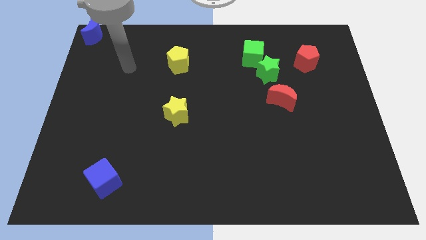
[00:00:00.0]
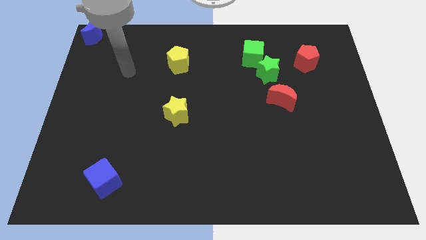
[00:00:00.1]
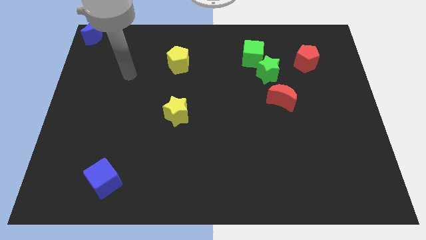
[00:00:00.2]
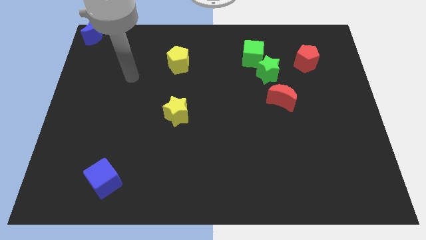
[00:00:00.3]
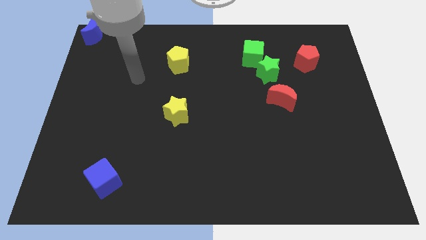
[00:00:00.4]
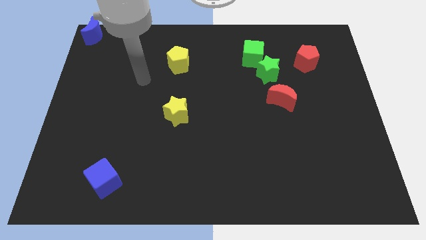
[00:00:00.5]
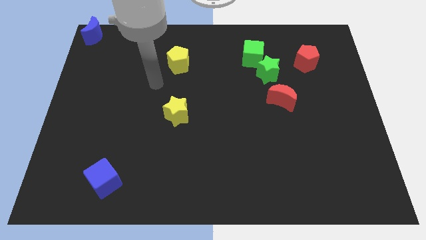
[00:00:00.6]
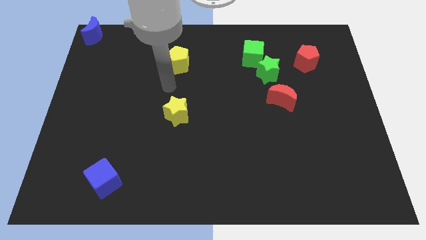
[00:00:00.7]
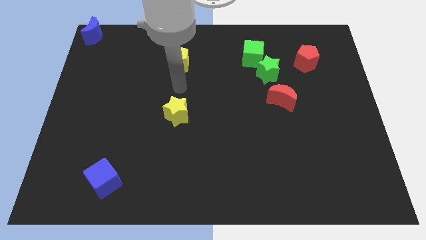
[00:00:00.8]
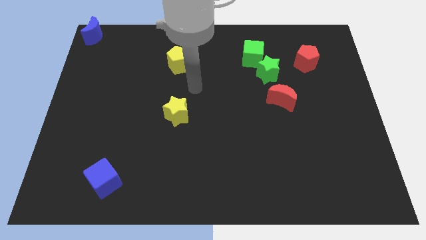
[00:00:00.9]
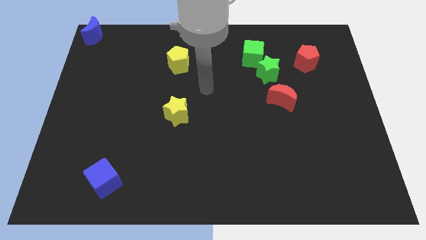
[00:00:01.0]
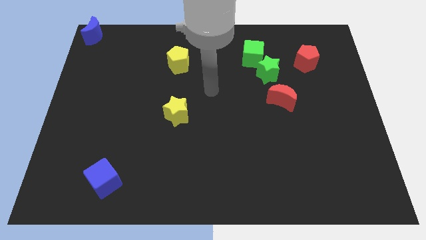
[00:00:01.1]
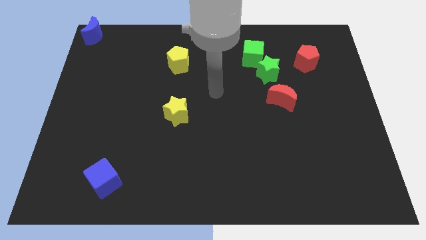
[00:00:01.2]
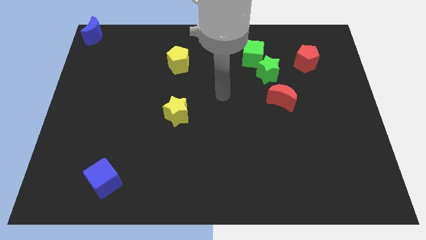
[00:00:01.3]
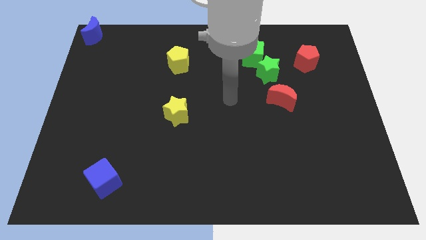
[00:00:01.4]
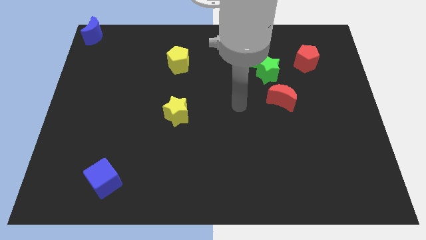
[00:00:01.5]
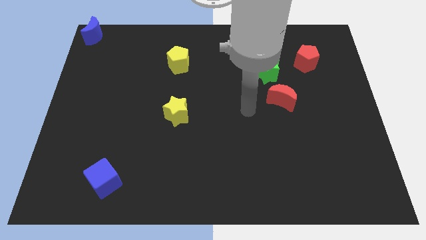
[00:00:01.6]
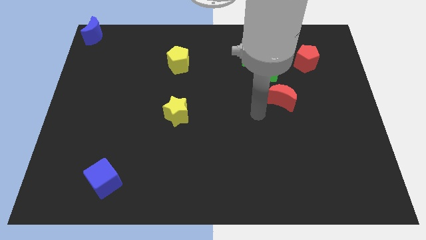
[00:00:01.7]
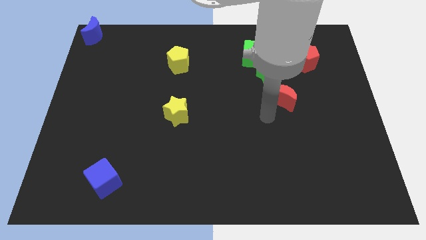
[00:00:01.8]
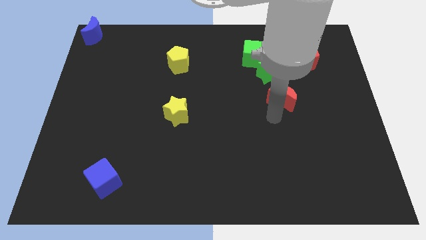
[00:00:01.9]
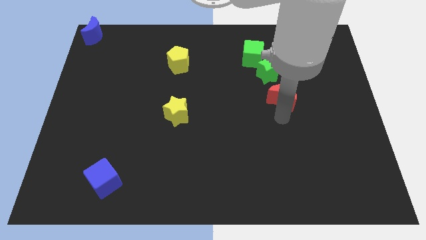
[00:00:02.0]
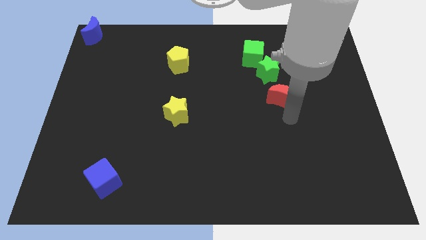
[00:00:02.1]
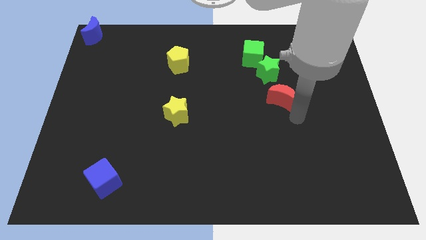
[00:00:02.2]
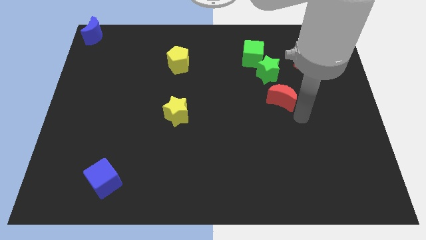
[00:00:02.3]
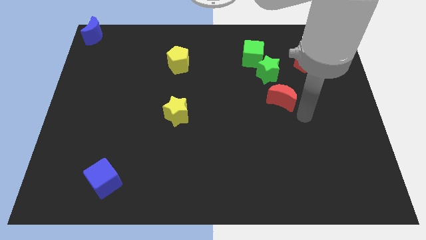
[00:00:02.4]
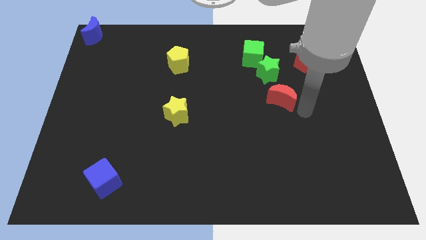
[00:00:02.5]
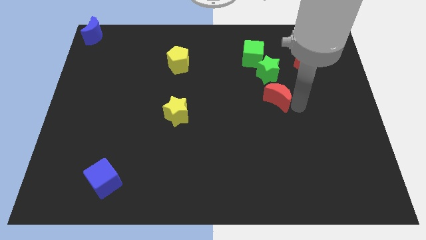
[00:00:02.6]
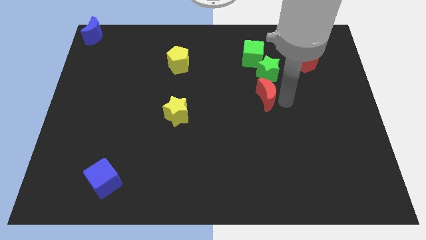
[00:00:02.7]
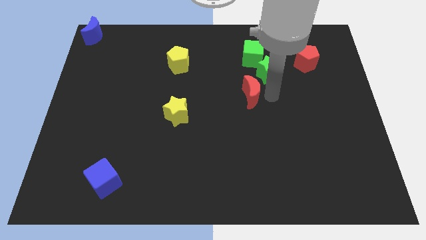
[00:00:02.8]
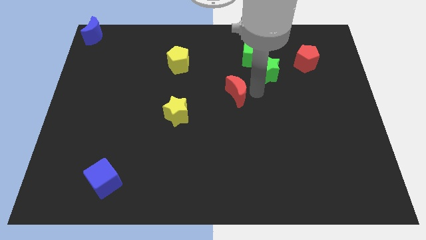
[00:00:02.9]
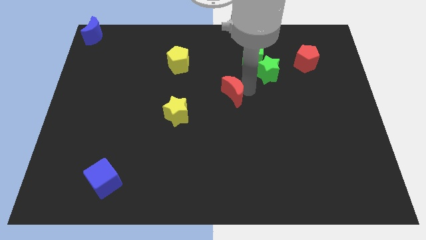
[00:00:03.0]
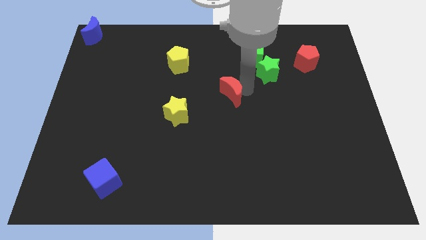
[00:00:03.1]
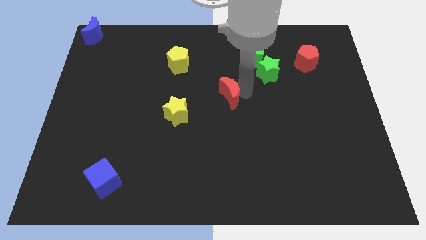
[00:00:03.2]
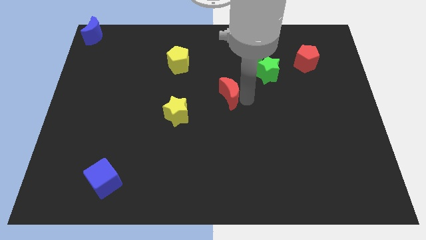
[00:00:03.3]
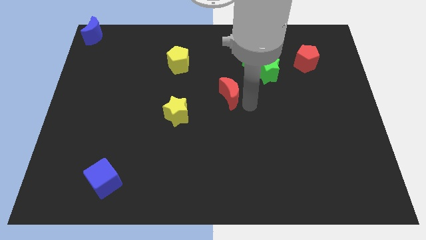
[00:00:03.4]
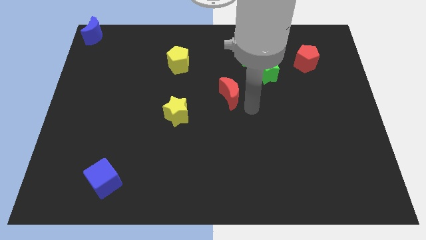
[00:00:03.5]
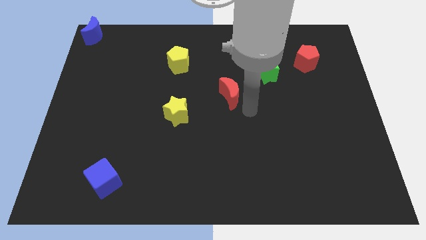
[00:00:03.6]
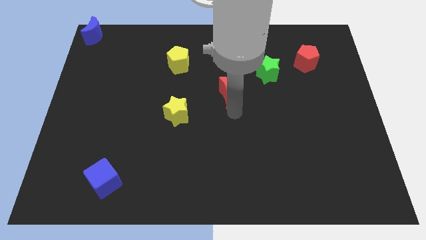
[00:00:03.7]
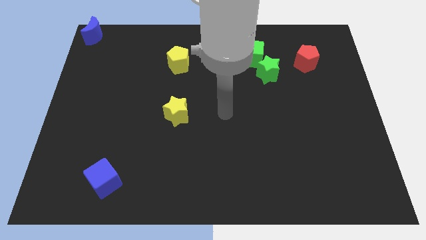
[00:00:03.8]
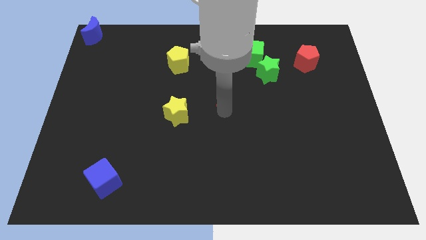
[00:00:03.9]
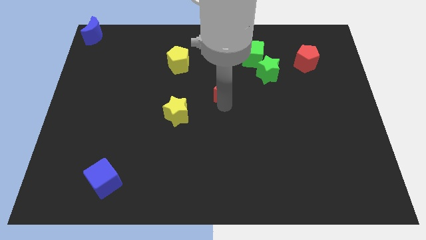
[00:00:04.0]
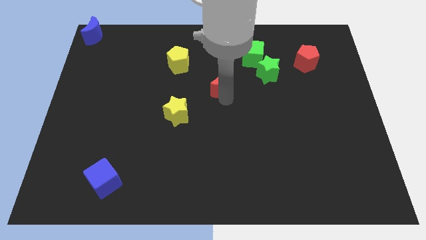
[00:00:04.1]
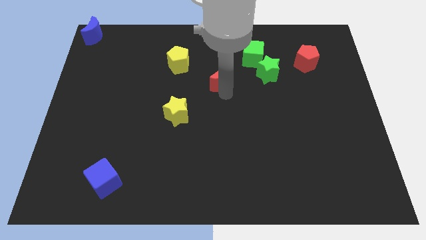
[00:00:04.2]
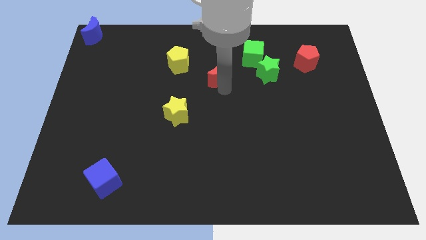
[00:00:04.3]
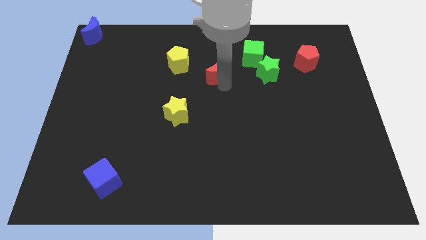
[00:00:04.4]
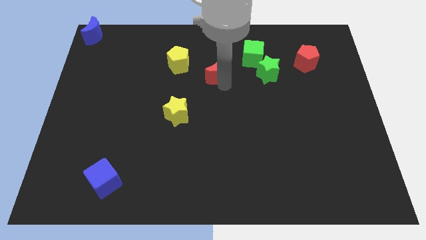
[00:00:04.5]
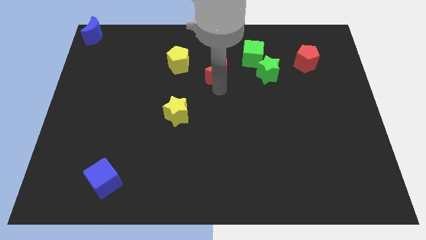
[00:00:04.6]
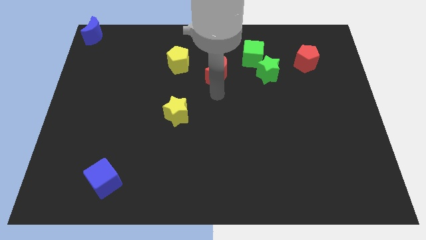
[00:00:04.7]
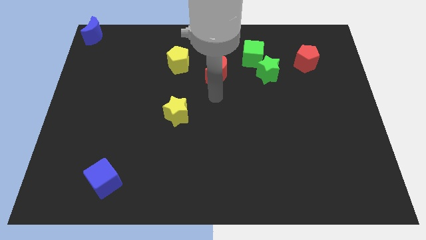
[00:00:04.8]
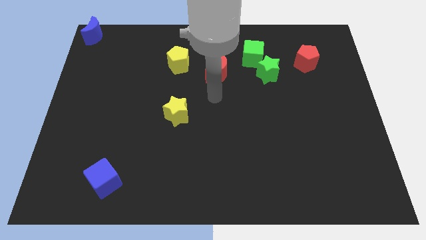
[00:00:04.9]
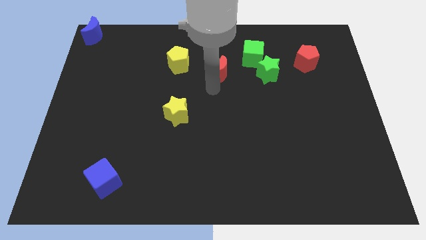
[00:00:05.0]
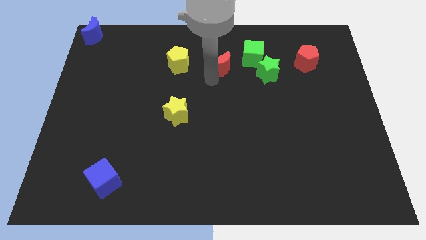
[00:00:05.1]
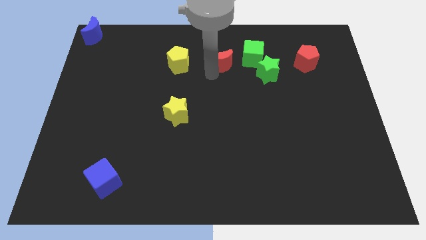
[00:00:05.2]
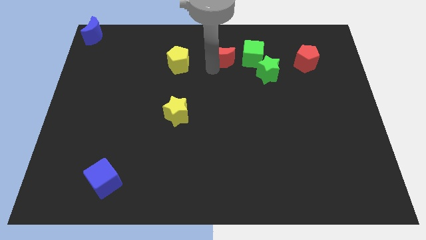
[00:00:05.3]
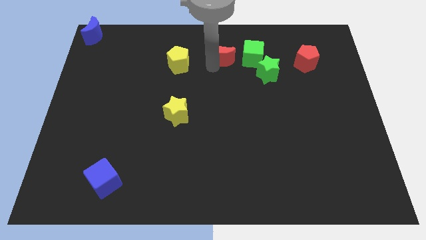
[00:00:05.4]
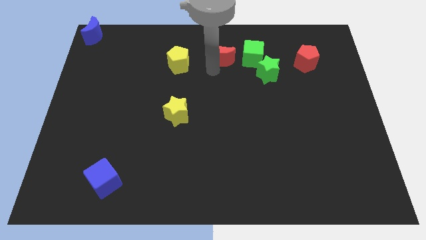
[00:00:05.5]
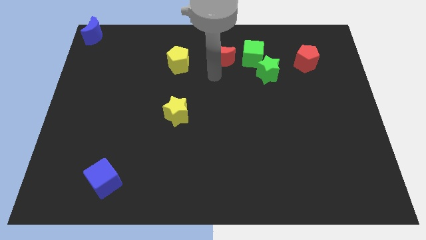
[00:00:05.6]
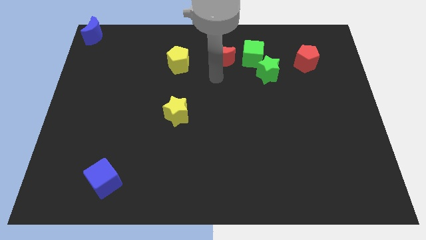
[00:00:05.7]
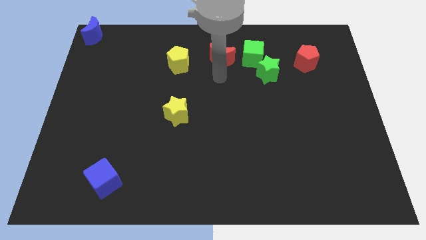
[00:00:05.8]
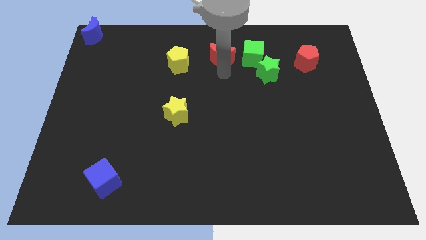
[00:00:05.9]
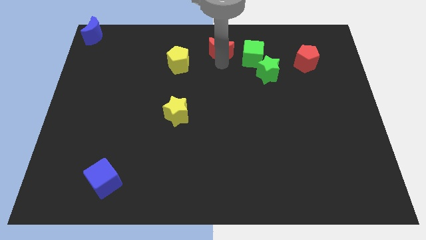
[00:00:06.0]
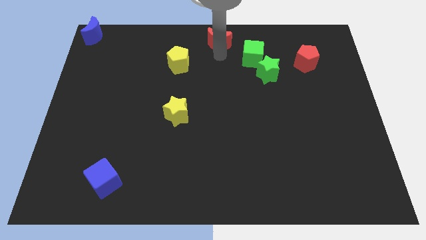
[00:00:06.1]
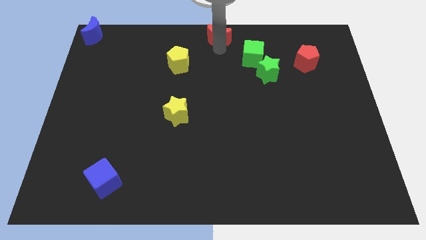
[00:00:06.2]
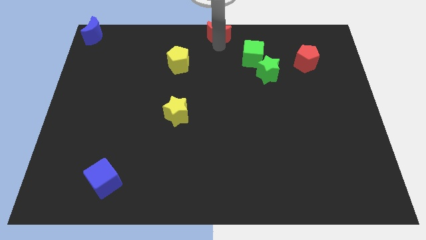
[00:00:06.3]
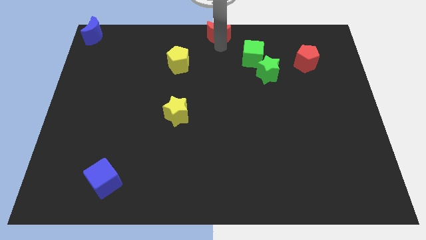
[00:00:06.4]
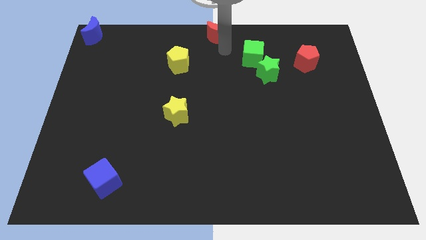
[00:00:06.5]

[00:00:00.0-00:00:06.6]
push the red crescent to the top center

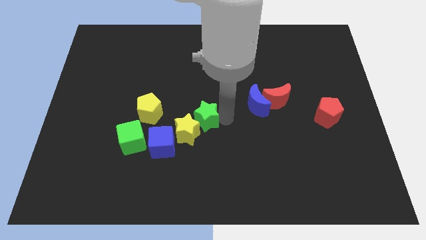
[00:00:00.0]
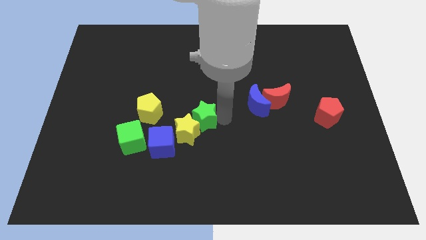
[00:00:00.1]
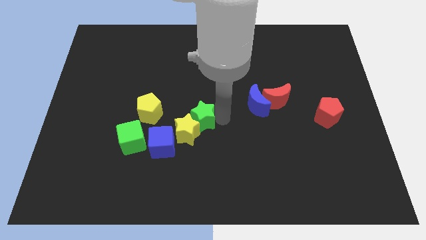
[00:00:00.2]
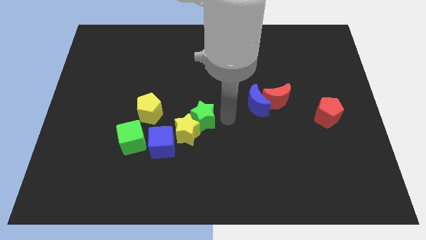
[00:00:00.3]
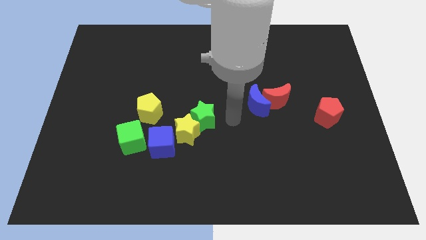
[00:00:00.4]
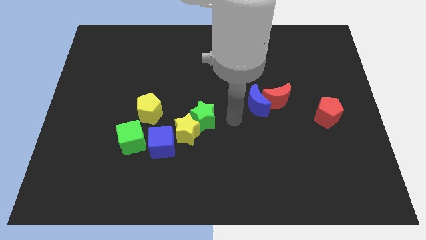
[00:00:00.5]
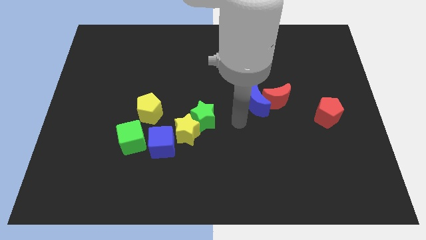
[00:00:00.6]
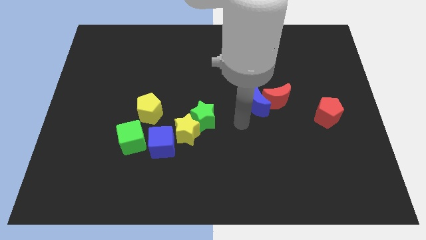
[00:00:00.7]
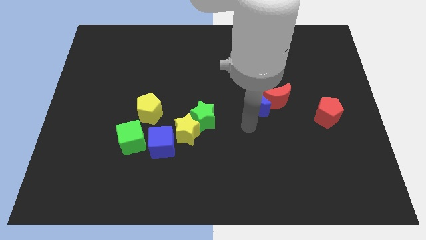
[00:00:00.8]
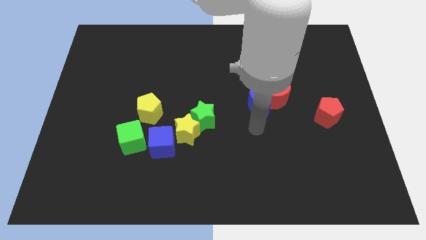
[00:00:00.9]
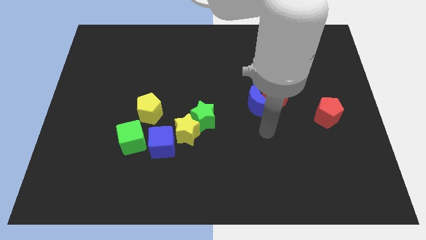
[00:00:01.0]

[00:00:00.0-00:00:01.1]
push the green star towards the yellow star

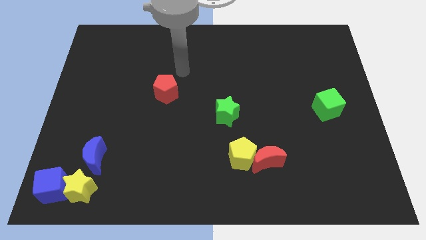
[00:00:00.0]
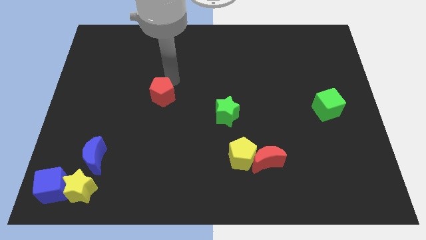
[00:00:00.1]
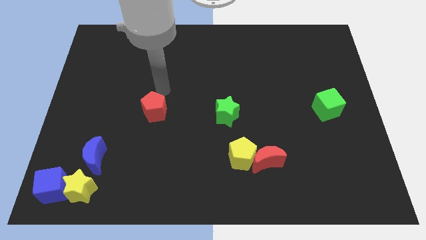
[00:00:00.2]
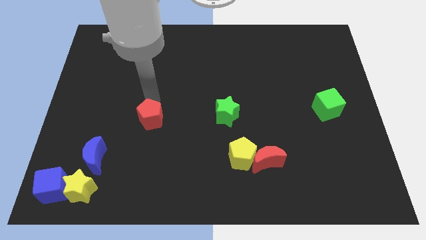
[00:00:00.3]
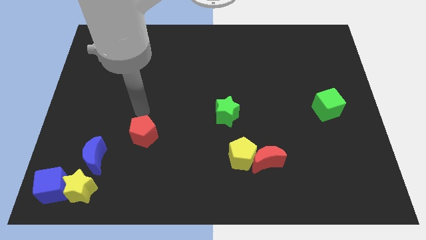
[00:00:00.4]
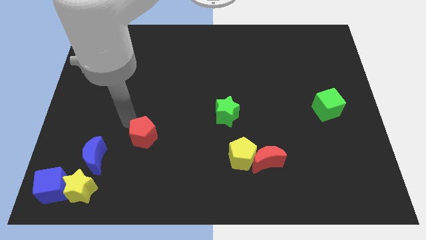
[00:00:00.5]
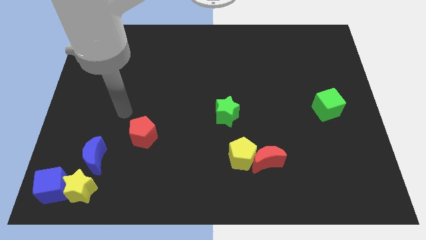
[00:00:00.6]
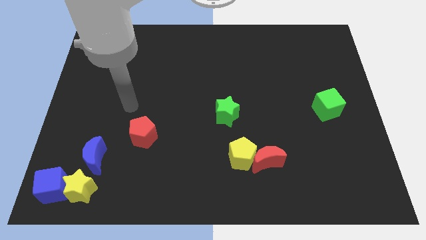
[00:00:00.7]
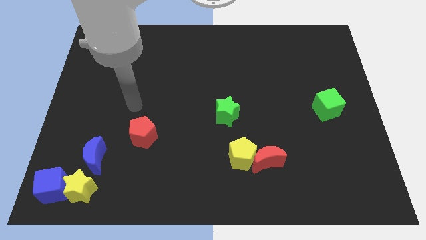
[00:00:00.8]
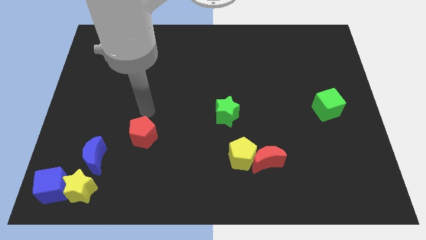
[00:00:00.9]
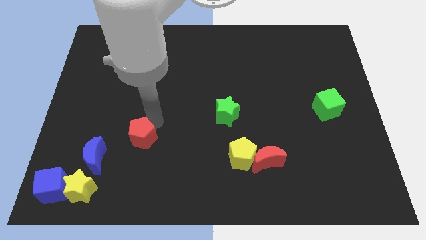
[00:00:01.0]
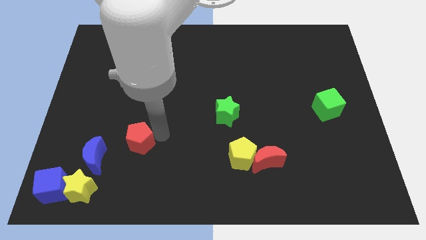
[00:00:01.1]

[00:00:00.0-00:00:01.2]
move the red penatgon to the top right of the blue crescent
